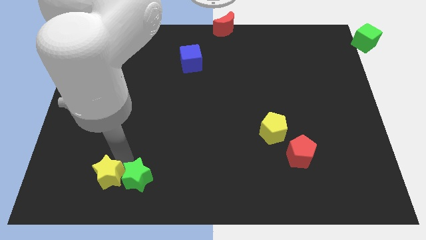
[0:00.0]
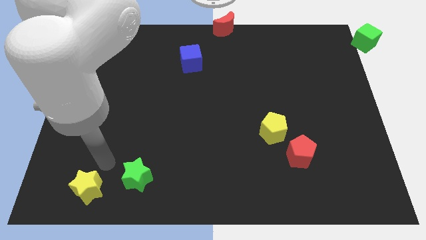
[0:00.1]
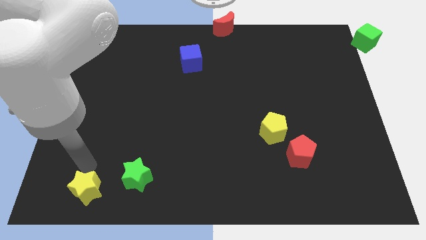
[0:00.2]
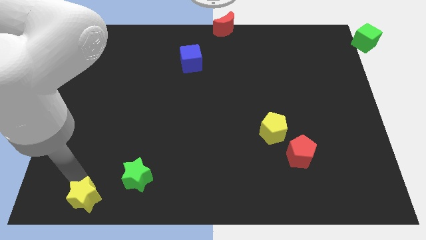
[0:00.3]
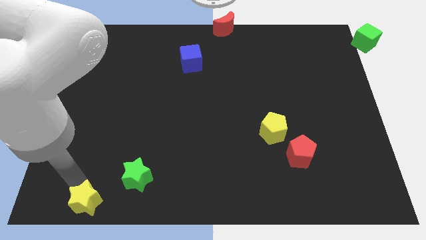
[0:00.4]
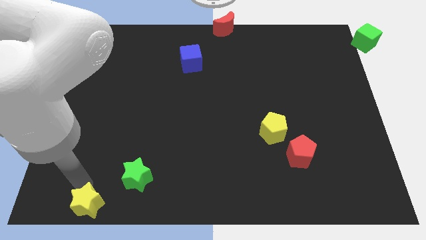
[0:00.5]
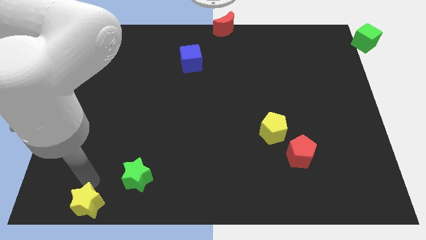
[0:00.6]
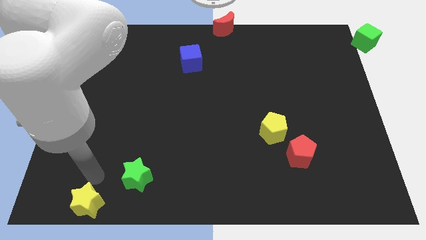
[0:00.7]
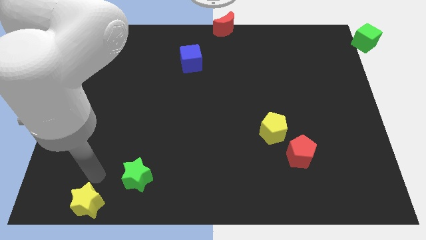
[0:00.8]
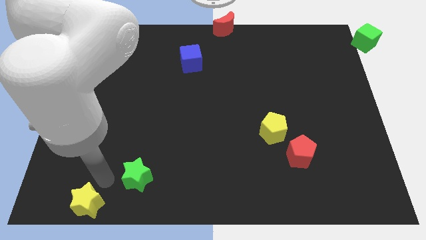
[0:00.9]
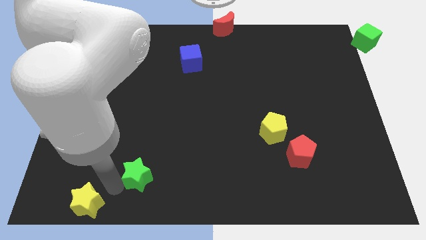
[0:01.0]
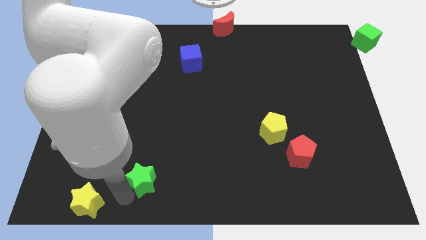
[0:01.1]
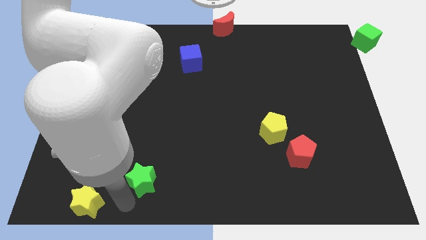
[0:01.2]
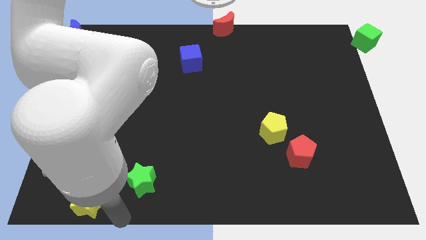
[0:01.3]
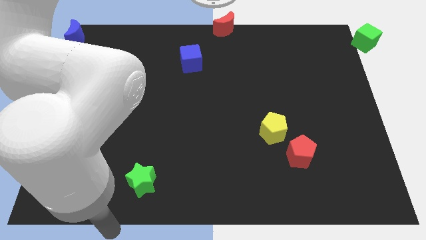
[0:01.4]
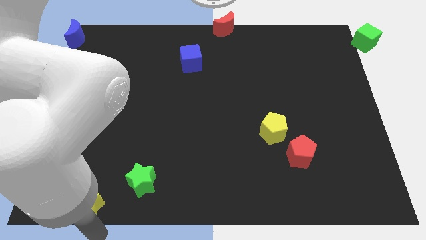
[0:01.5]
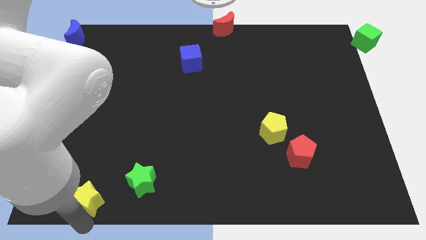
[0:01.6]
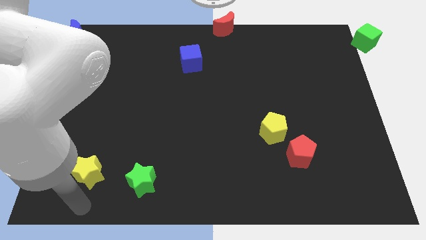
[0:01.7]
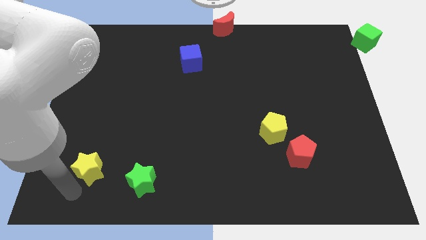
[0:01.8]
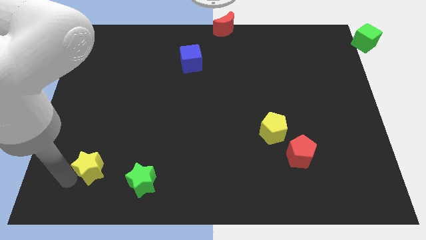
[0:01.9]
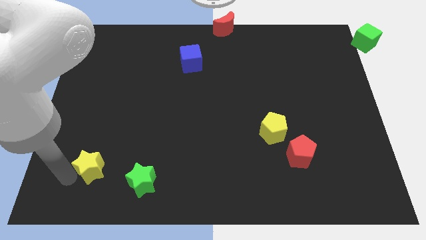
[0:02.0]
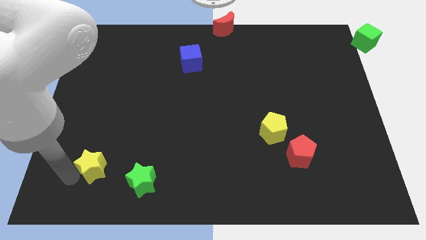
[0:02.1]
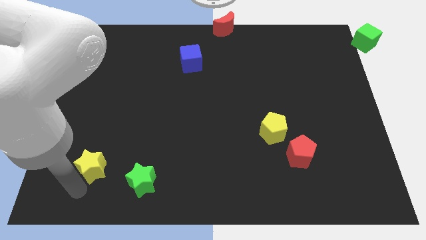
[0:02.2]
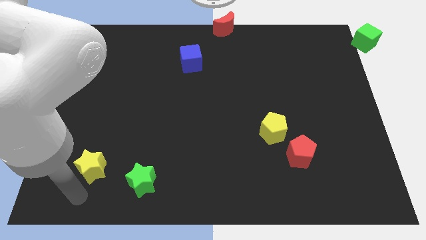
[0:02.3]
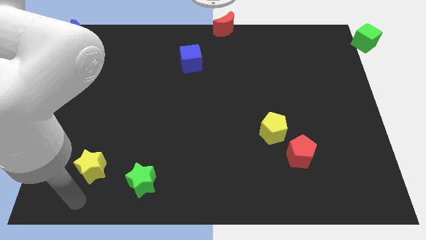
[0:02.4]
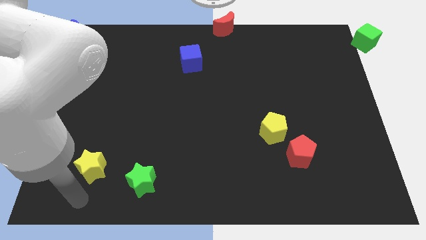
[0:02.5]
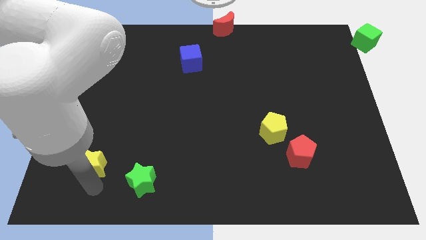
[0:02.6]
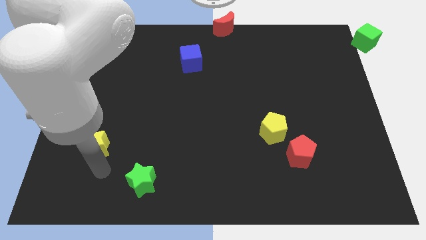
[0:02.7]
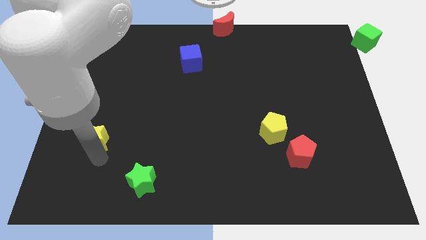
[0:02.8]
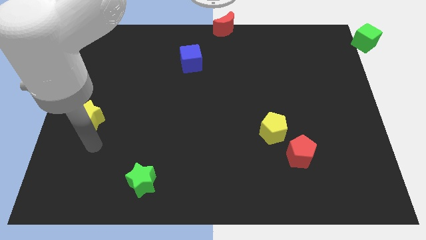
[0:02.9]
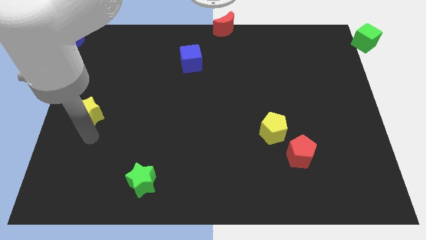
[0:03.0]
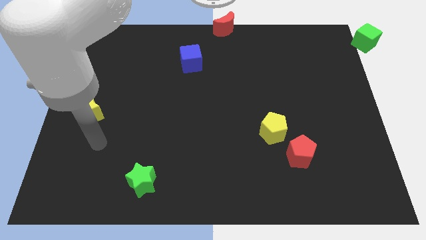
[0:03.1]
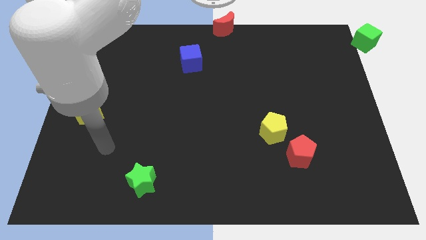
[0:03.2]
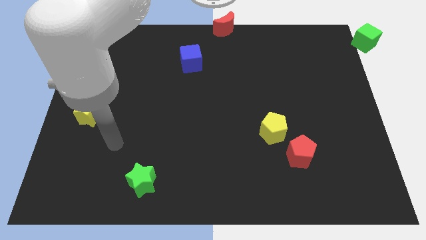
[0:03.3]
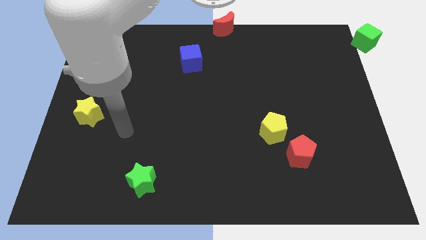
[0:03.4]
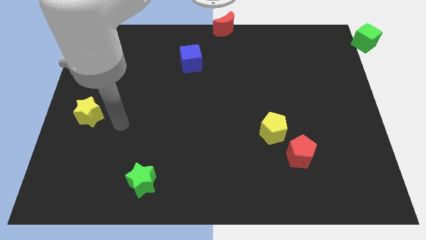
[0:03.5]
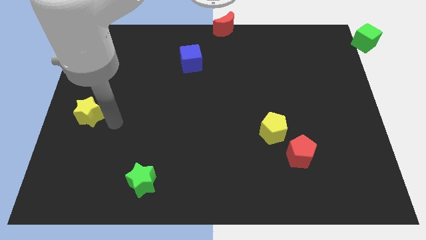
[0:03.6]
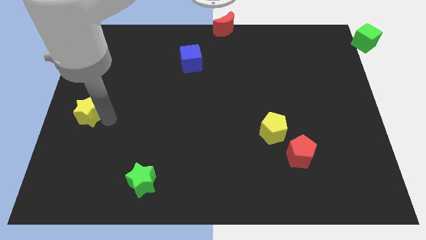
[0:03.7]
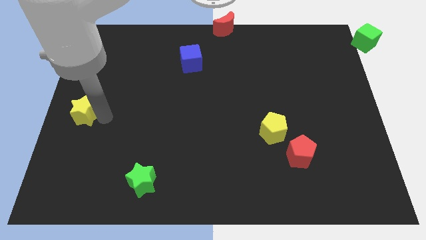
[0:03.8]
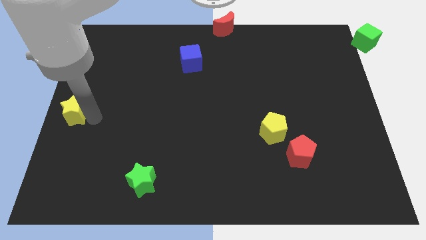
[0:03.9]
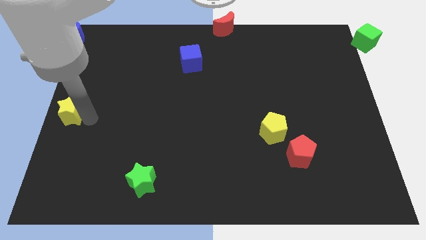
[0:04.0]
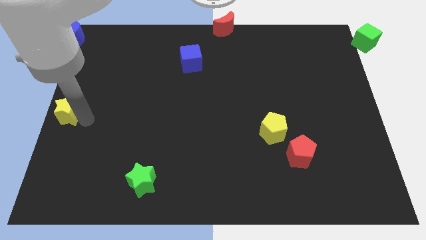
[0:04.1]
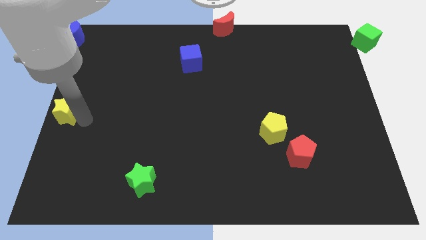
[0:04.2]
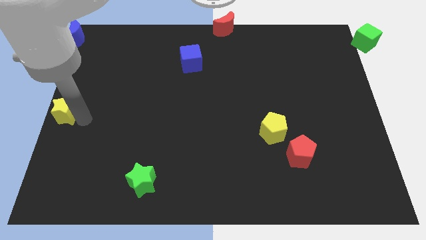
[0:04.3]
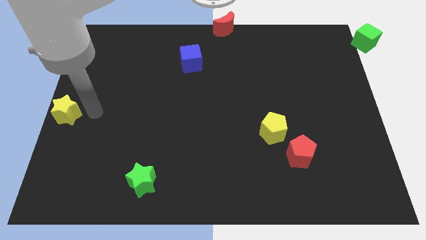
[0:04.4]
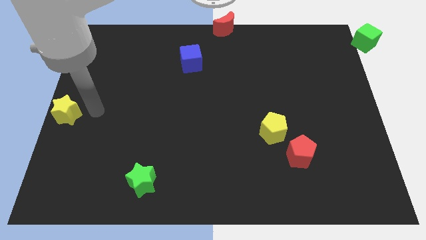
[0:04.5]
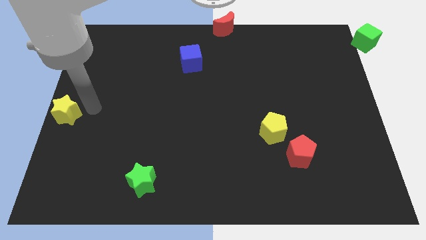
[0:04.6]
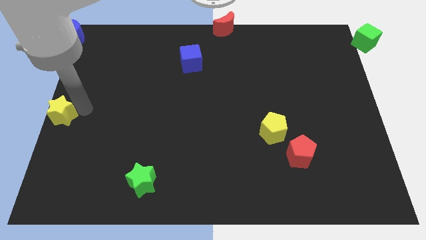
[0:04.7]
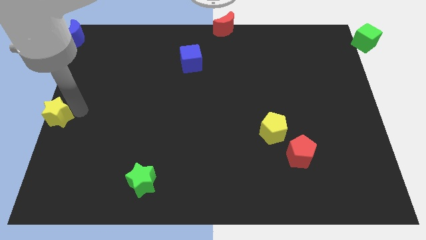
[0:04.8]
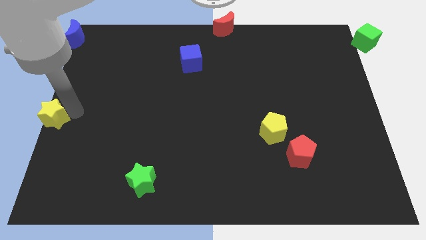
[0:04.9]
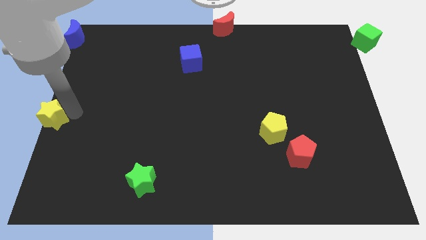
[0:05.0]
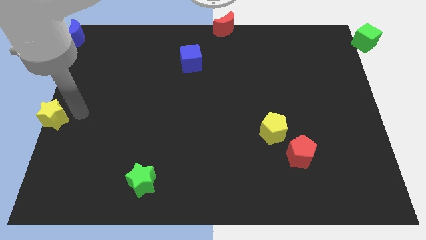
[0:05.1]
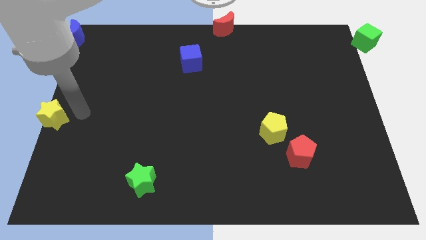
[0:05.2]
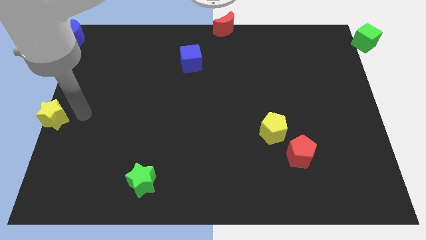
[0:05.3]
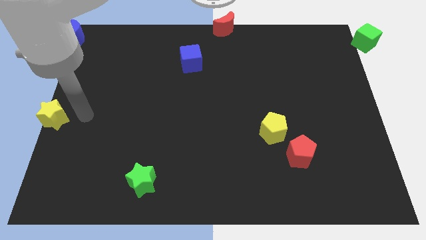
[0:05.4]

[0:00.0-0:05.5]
move the yellow star to the left center of the board

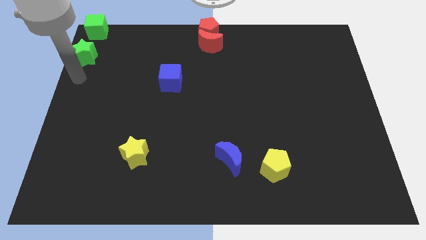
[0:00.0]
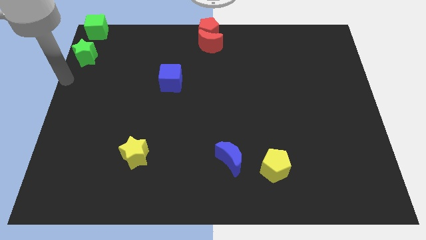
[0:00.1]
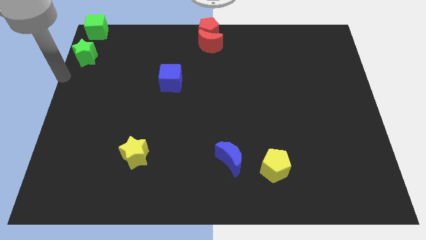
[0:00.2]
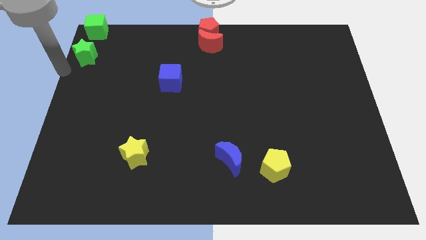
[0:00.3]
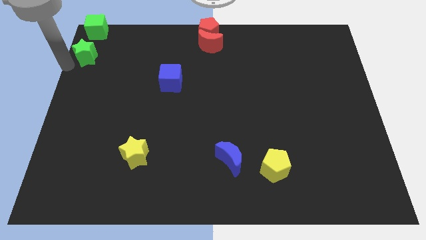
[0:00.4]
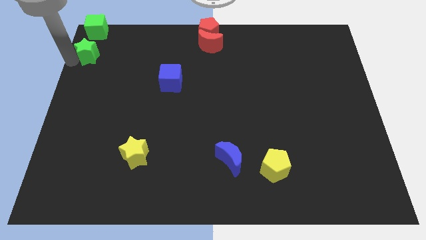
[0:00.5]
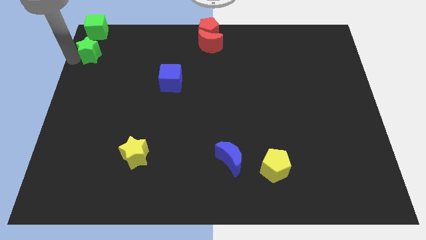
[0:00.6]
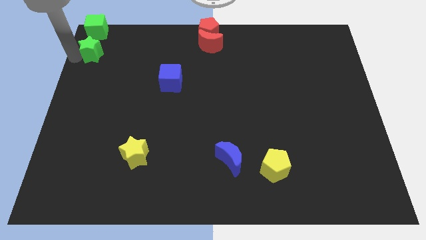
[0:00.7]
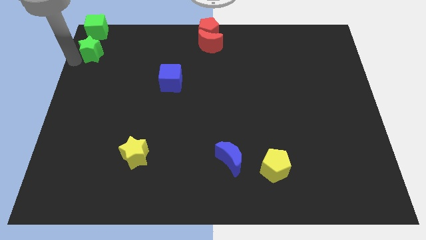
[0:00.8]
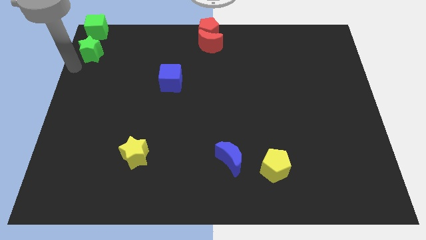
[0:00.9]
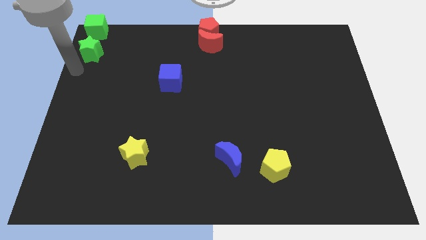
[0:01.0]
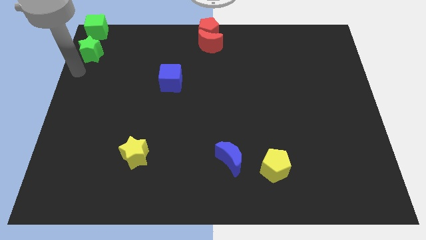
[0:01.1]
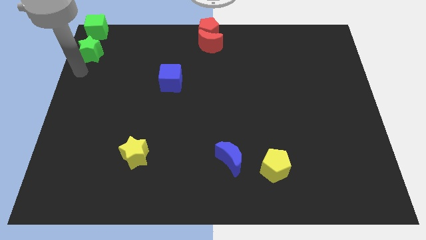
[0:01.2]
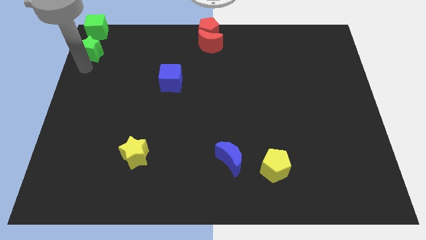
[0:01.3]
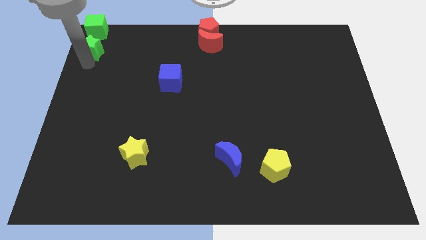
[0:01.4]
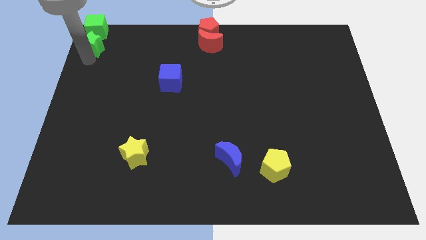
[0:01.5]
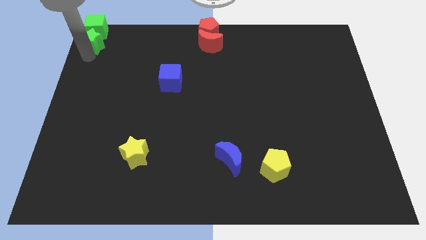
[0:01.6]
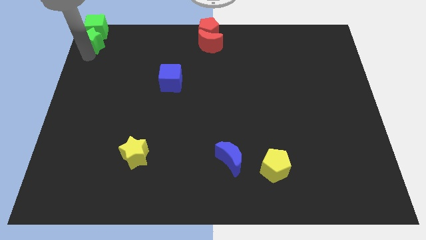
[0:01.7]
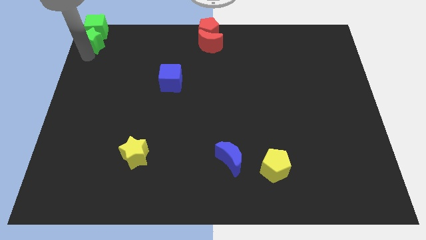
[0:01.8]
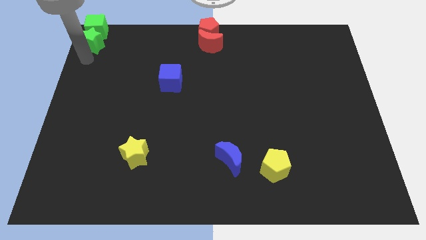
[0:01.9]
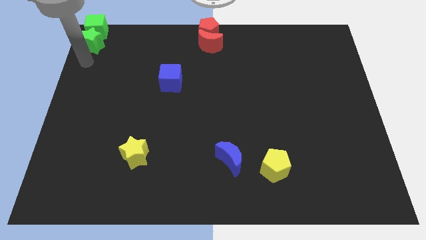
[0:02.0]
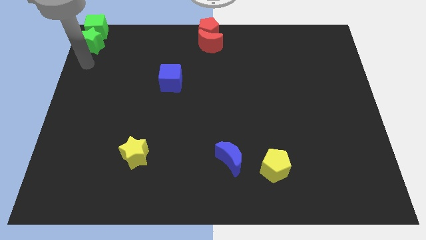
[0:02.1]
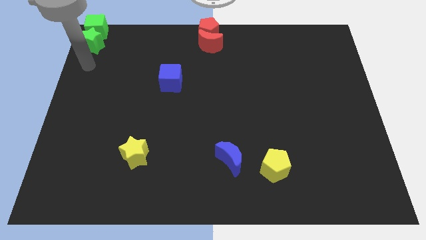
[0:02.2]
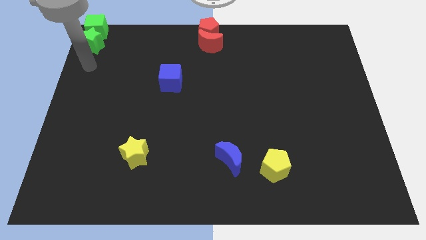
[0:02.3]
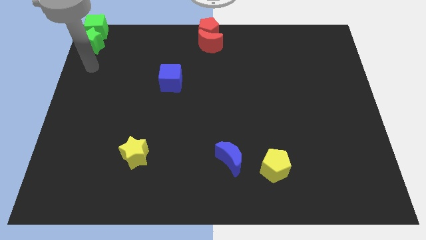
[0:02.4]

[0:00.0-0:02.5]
move the green star close to the green cube

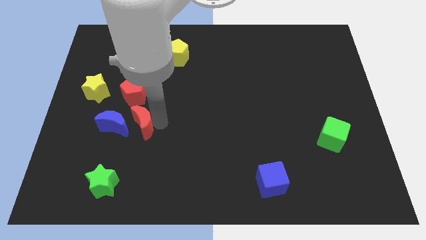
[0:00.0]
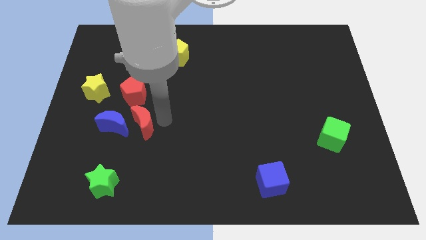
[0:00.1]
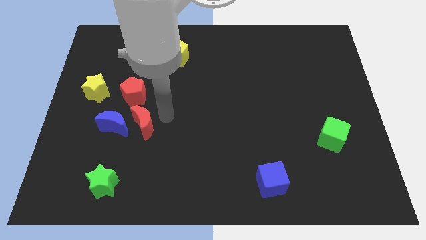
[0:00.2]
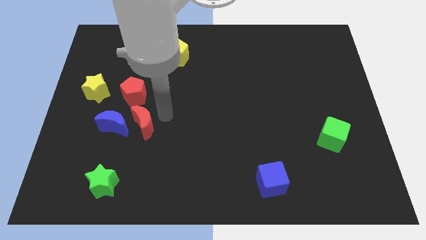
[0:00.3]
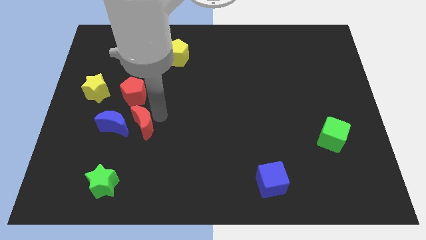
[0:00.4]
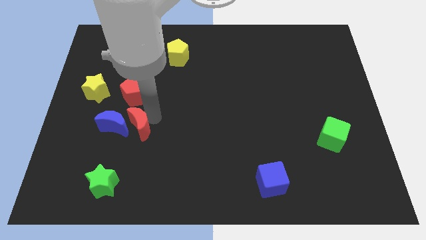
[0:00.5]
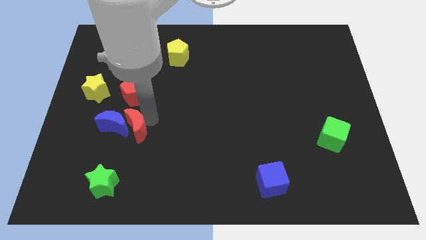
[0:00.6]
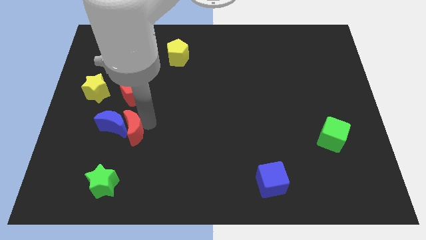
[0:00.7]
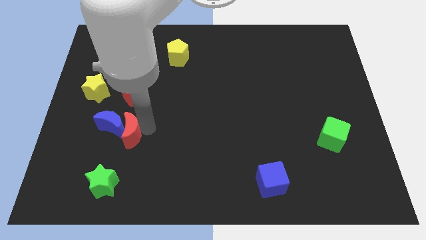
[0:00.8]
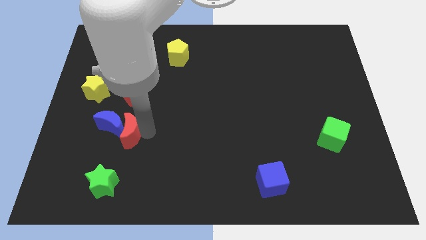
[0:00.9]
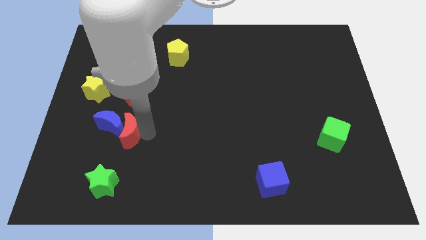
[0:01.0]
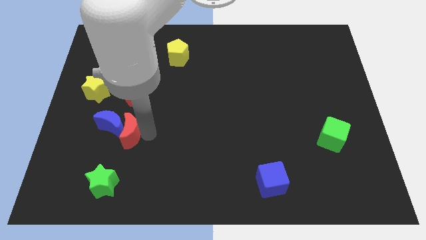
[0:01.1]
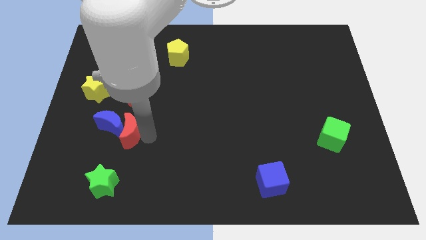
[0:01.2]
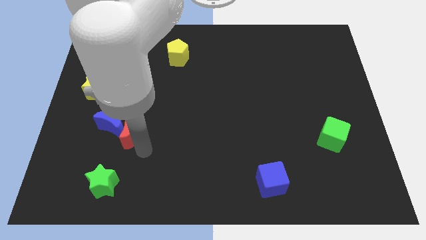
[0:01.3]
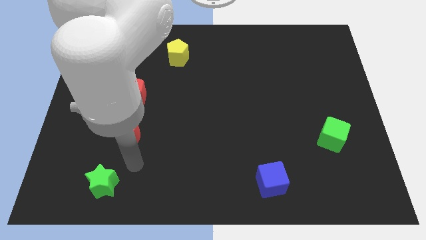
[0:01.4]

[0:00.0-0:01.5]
push the red moon closer to the blue moon
